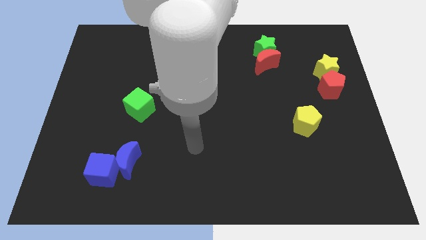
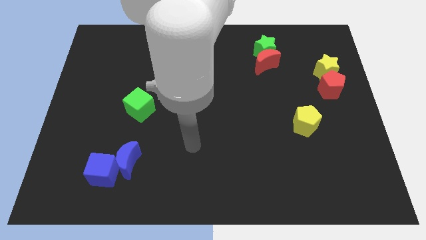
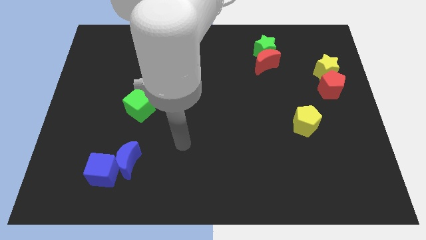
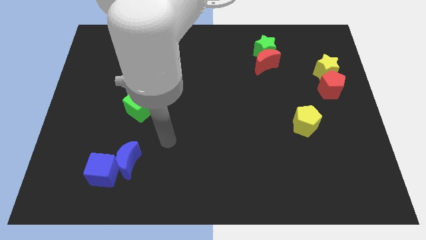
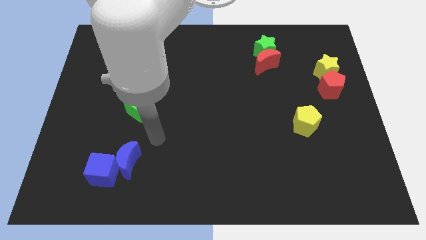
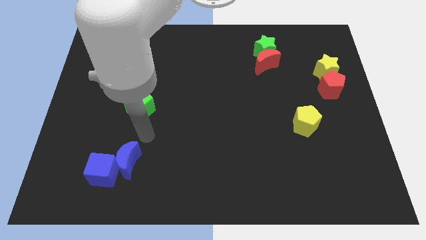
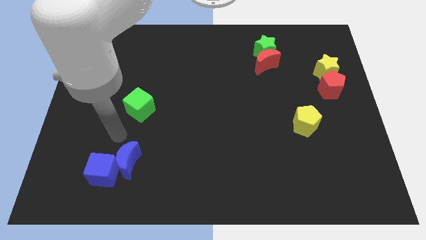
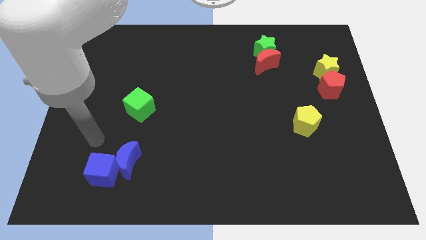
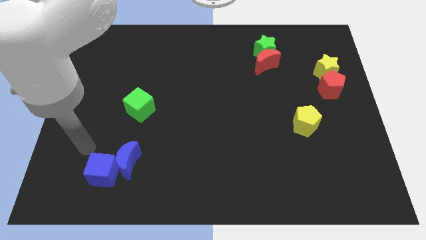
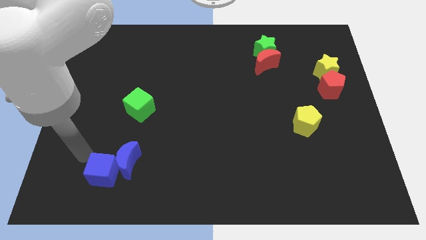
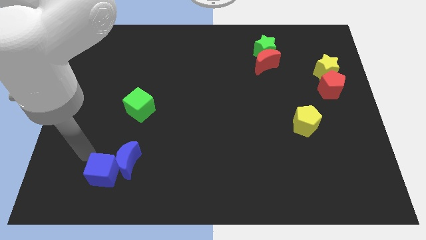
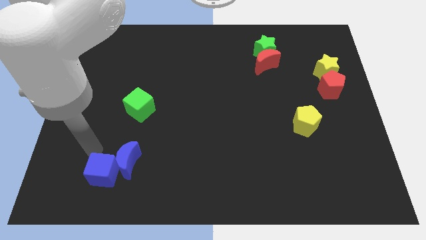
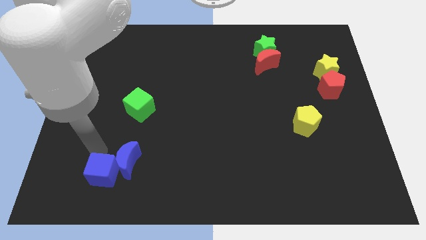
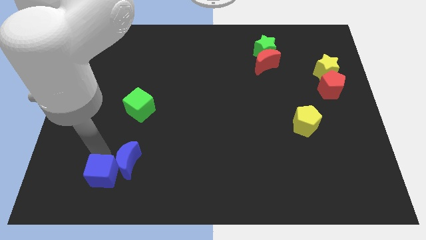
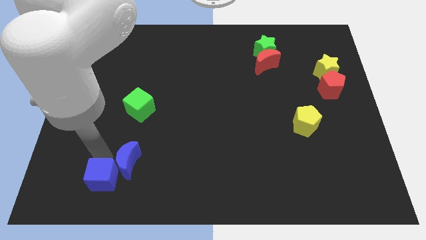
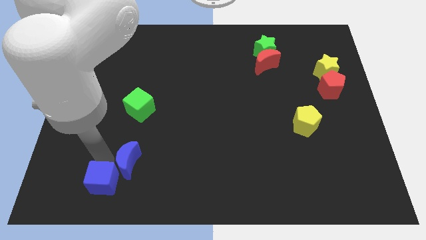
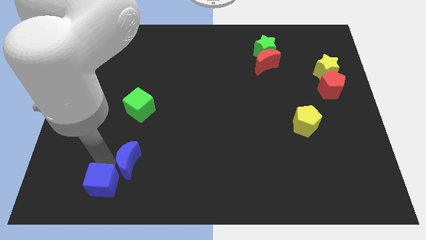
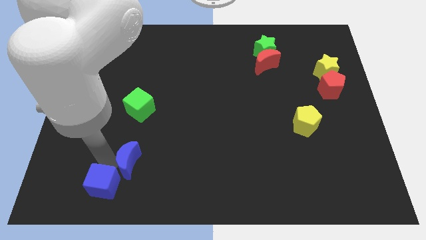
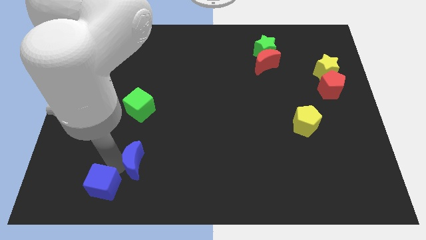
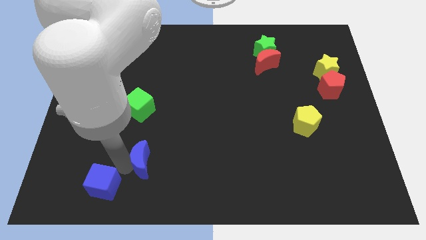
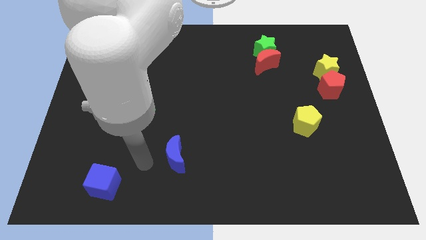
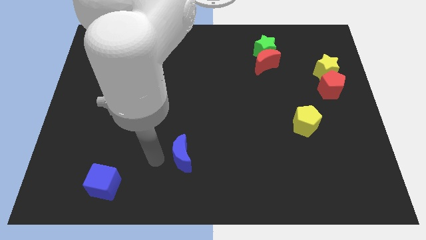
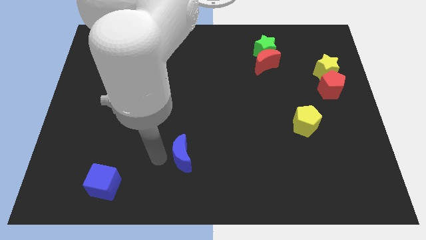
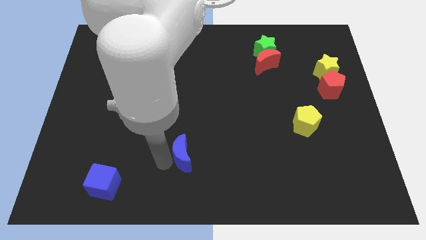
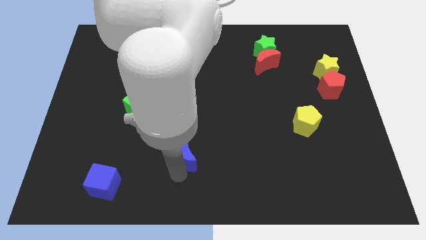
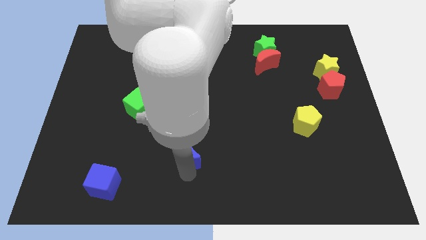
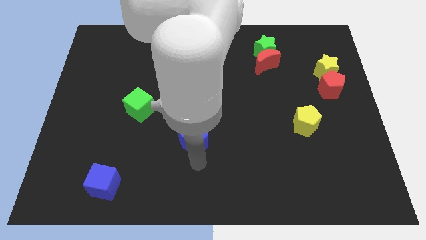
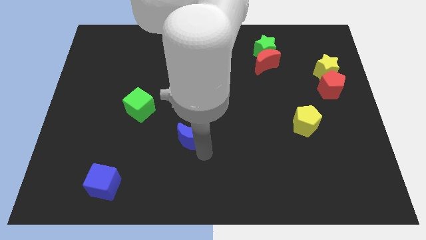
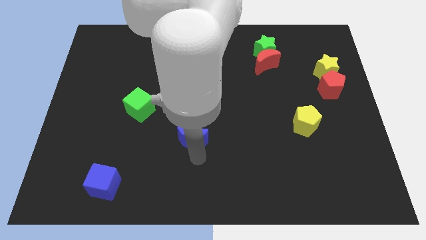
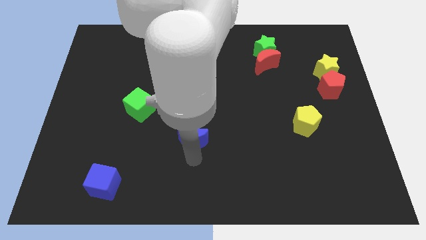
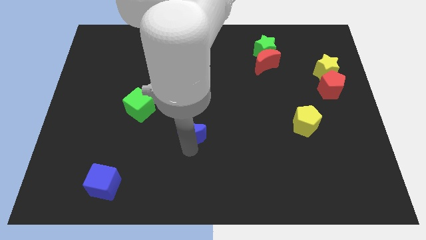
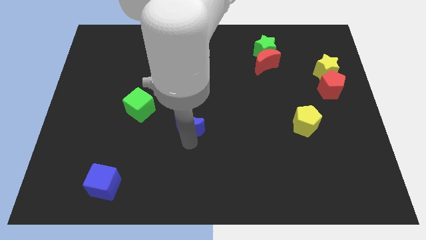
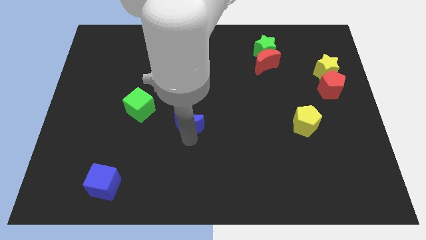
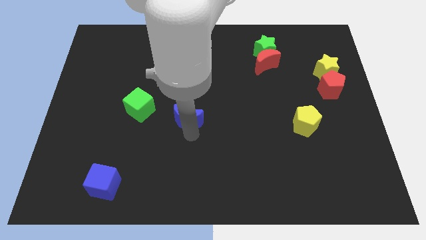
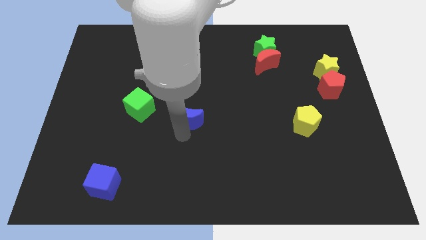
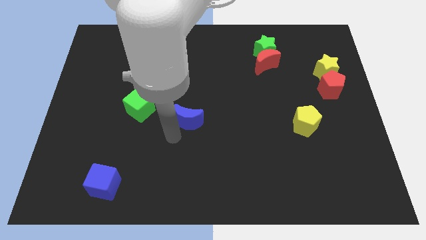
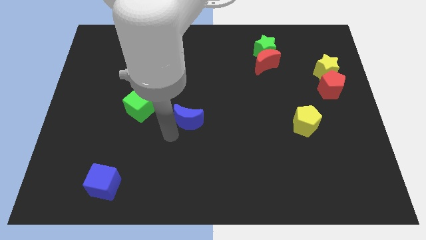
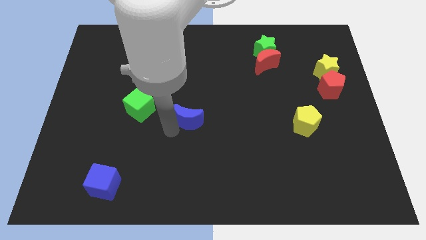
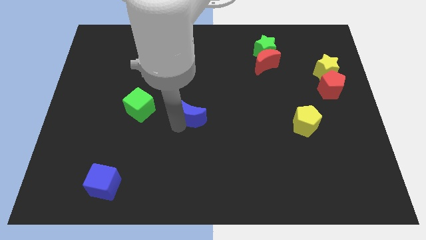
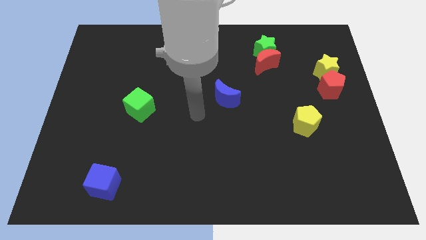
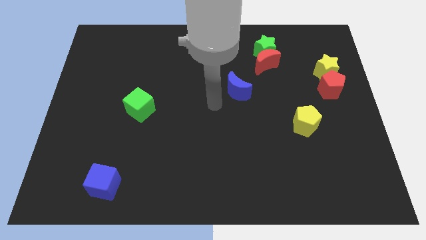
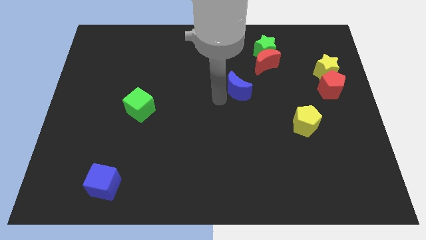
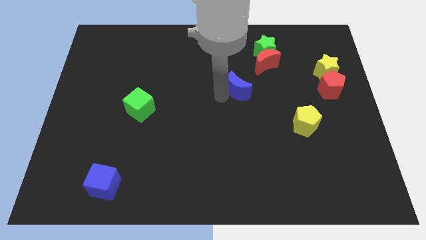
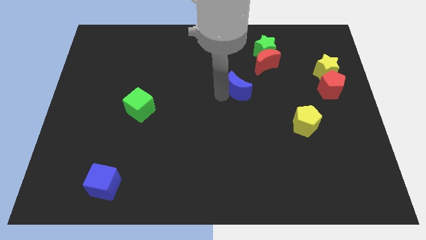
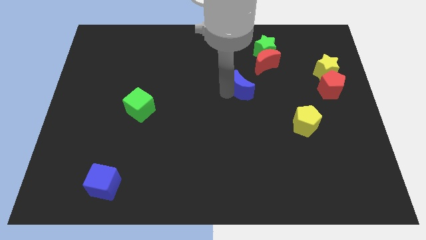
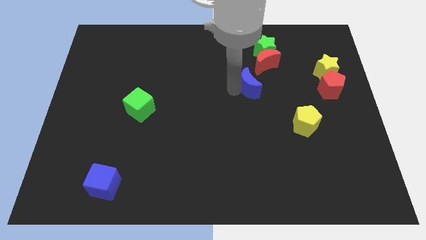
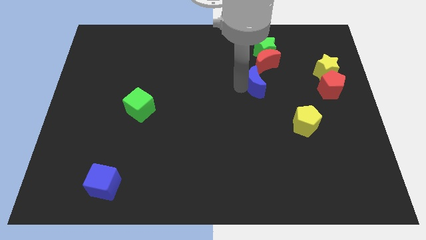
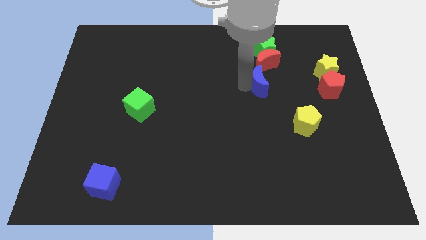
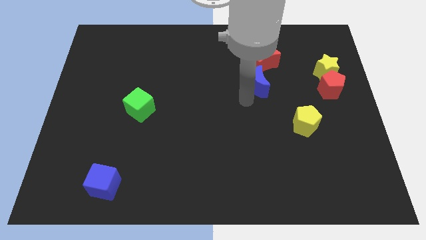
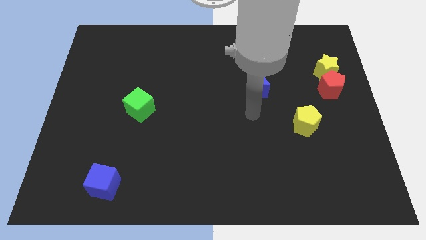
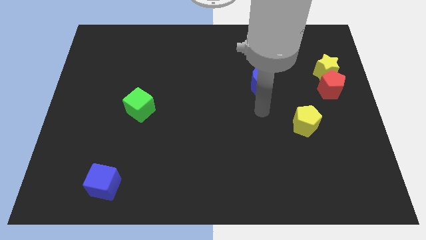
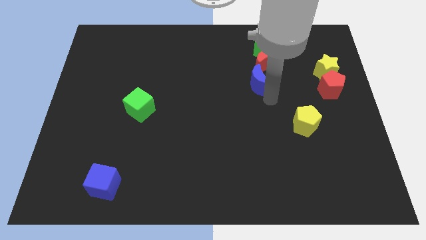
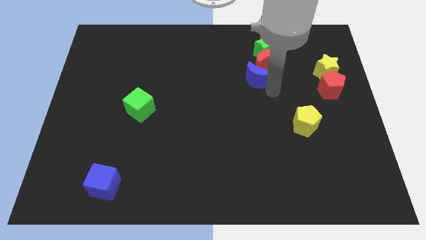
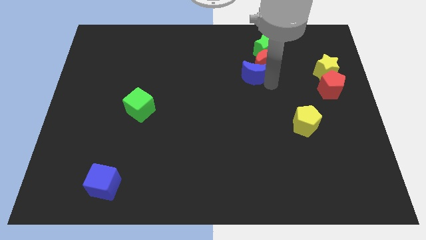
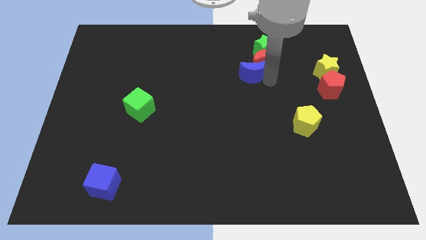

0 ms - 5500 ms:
put the blue moon towards the red moon

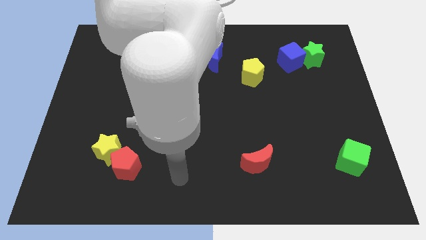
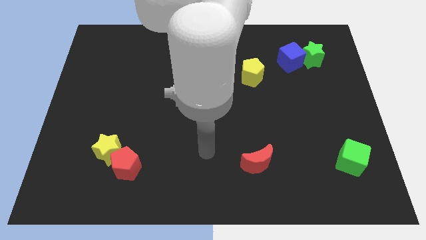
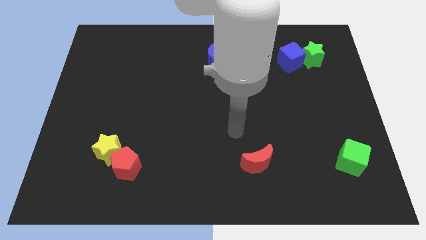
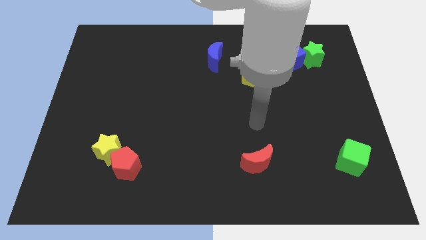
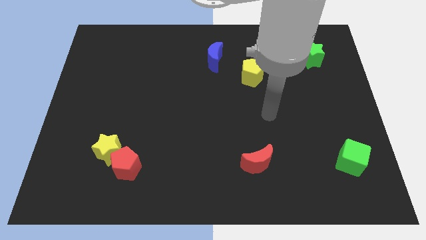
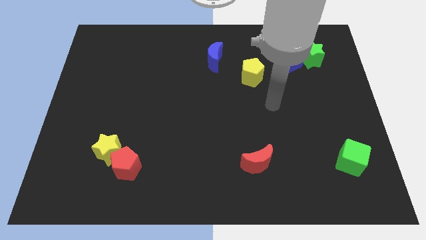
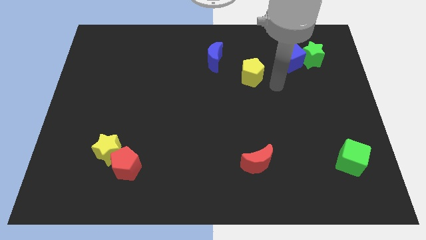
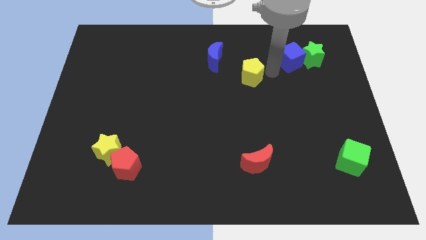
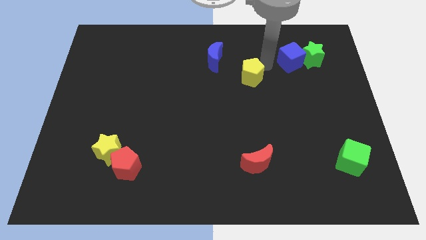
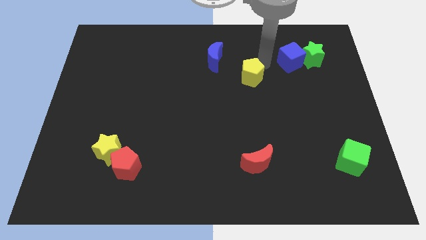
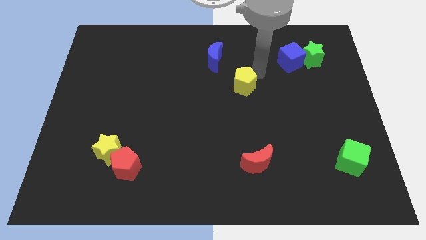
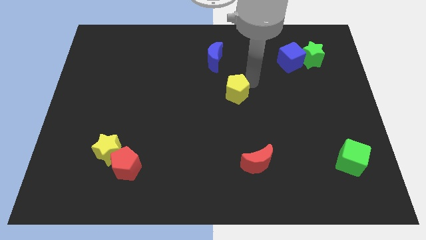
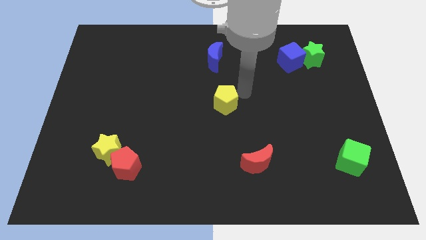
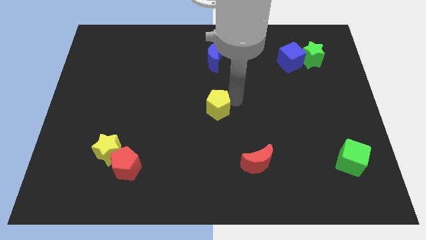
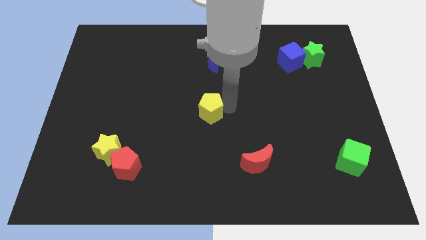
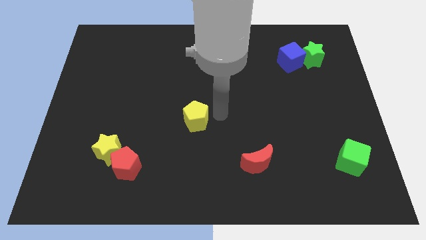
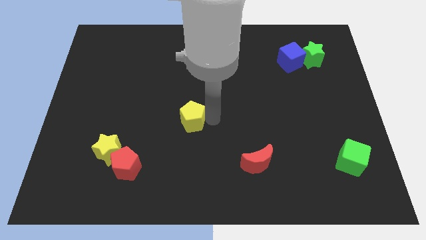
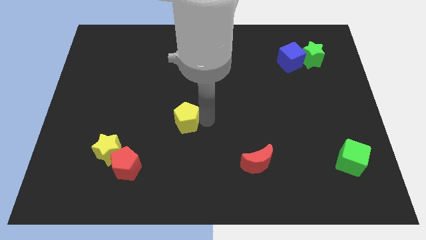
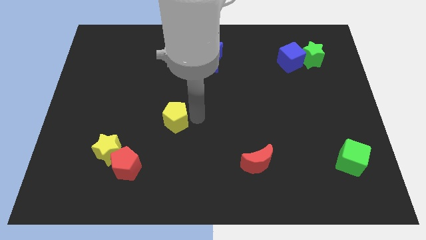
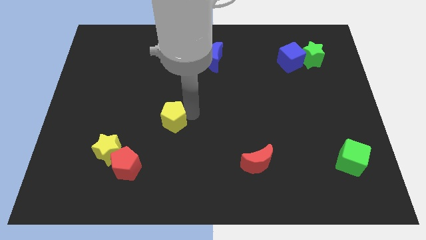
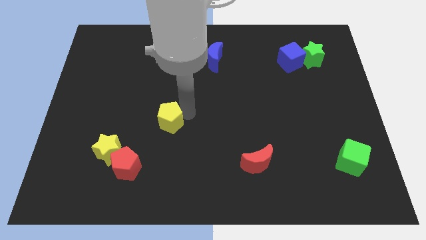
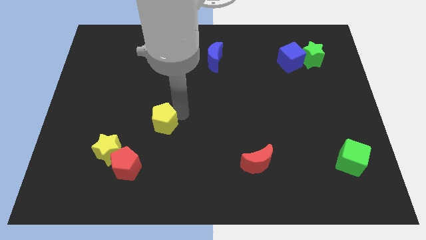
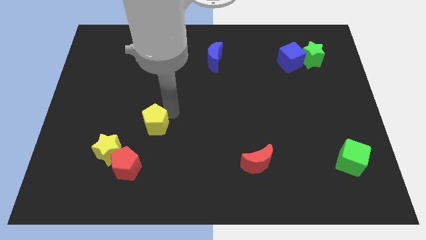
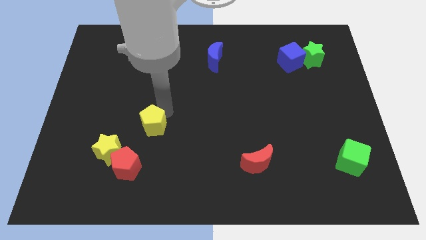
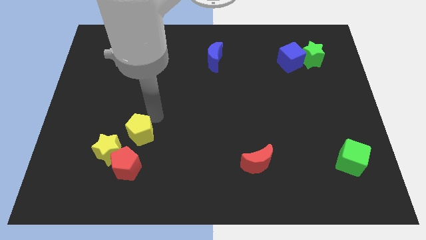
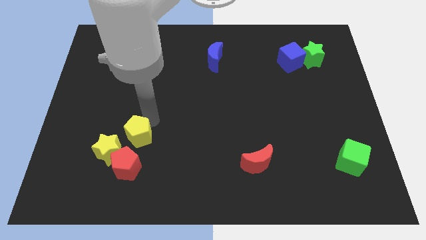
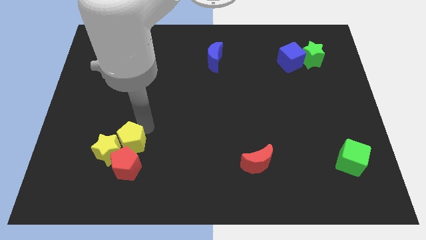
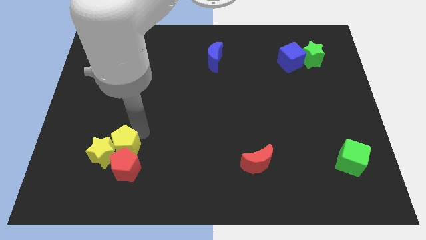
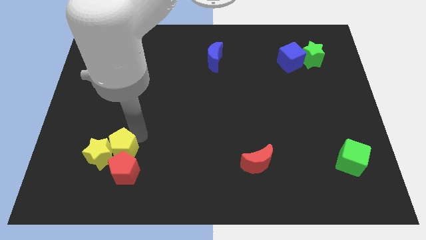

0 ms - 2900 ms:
put the yellow pentagon close to the red pentagon
